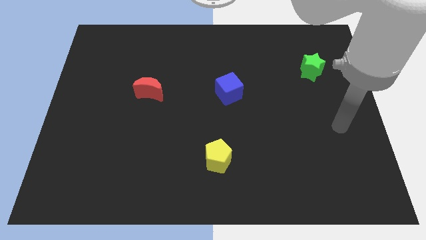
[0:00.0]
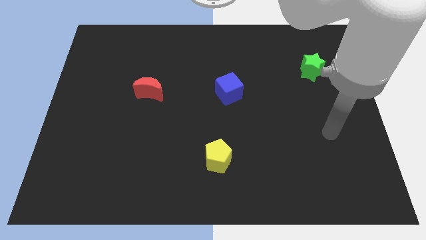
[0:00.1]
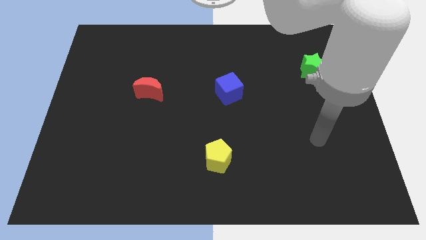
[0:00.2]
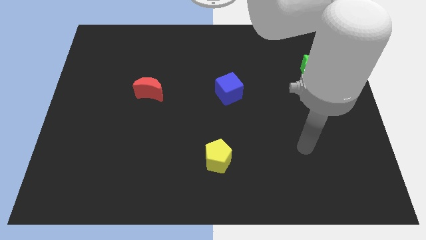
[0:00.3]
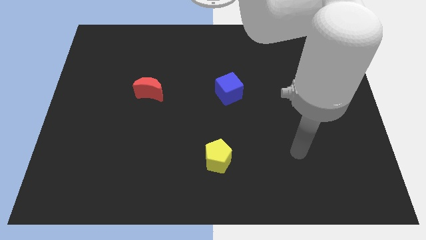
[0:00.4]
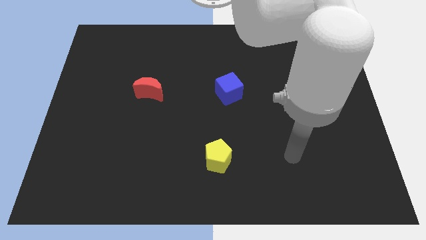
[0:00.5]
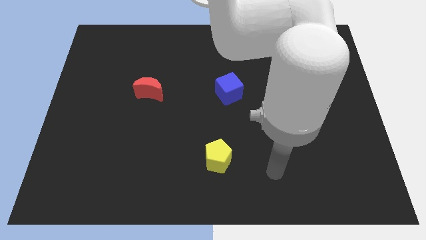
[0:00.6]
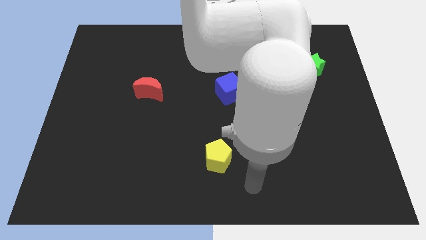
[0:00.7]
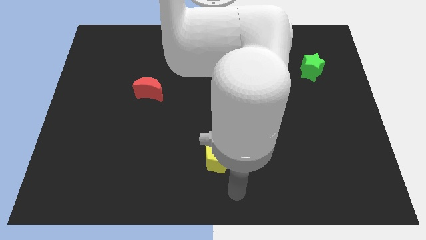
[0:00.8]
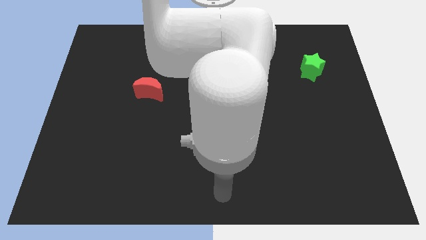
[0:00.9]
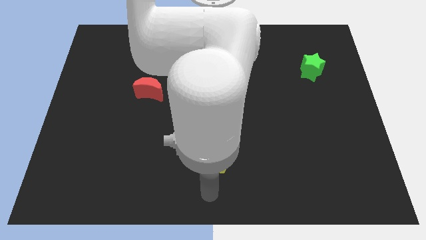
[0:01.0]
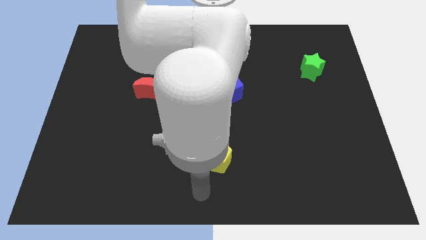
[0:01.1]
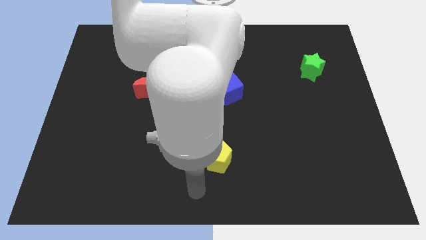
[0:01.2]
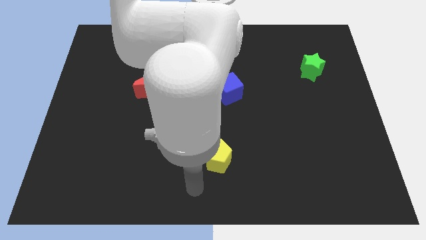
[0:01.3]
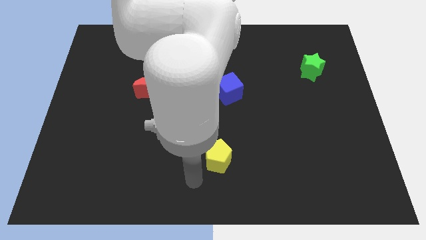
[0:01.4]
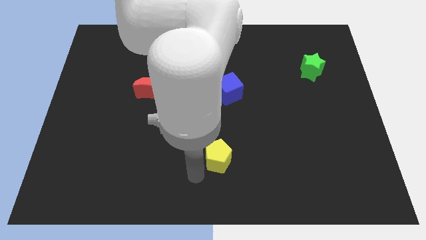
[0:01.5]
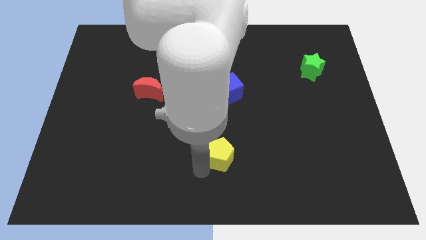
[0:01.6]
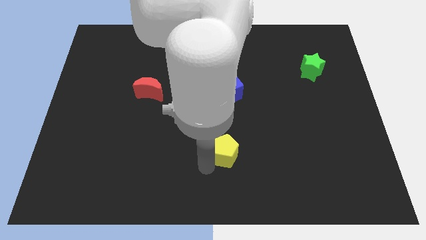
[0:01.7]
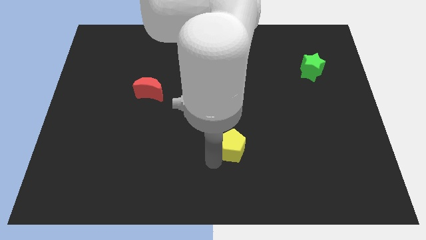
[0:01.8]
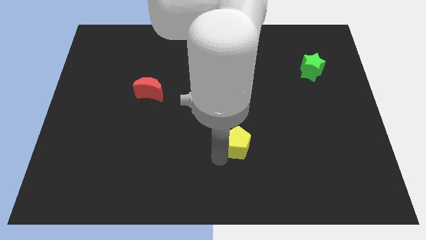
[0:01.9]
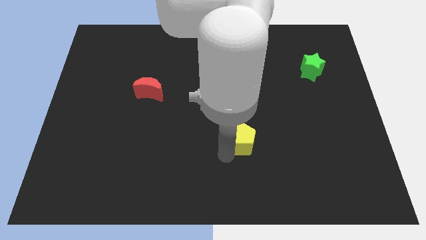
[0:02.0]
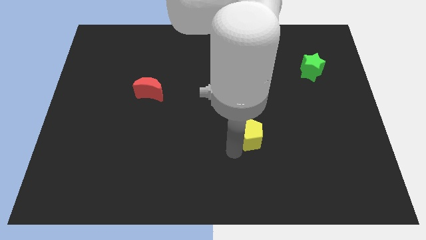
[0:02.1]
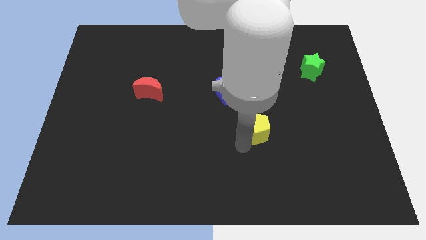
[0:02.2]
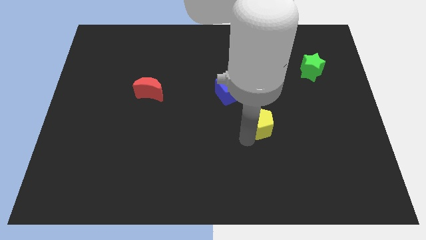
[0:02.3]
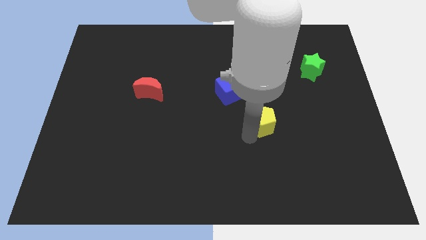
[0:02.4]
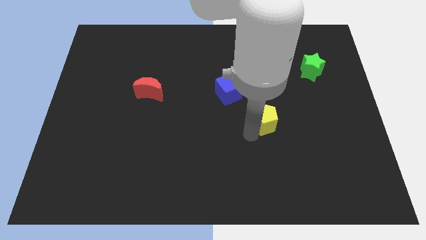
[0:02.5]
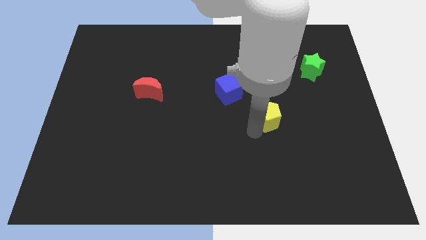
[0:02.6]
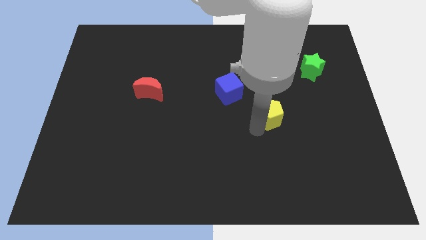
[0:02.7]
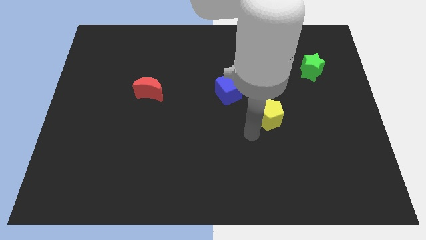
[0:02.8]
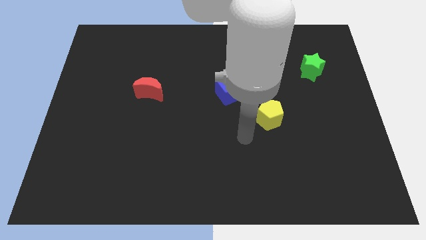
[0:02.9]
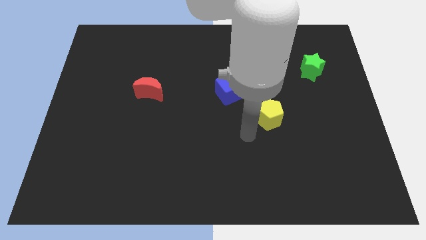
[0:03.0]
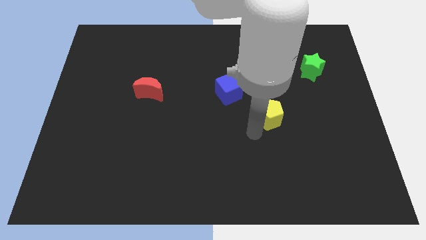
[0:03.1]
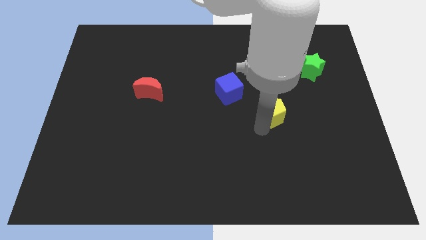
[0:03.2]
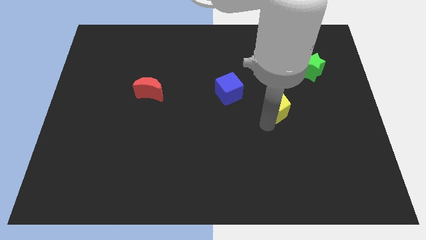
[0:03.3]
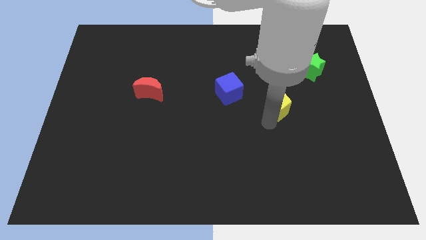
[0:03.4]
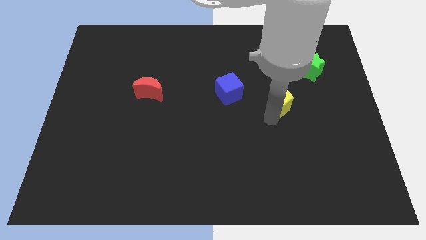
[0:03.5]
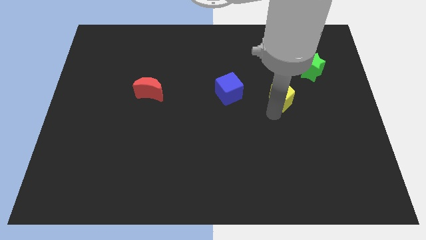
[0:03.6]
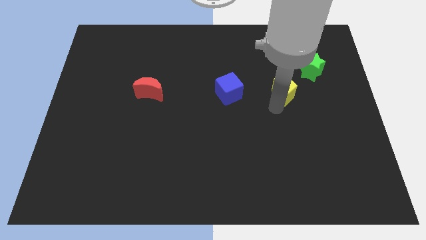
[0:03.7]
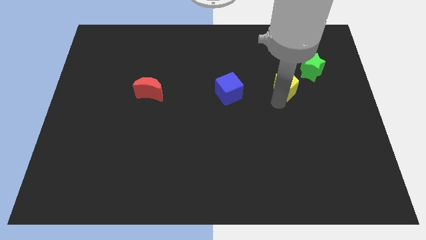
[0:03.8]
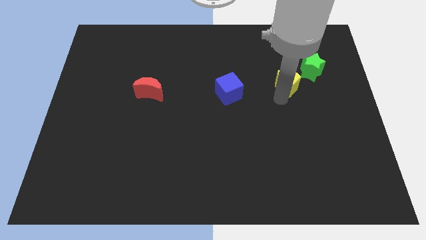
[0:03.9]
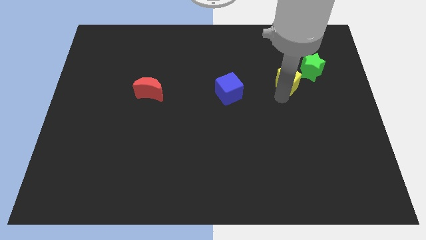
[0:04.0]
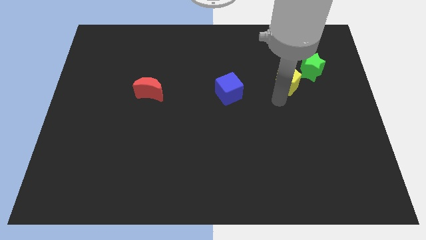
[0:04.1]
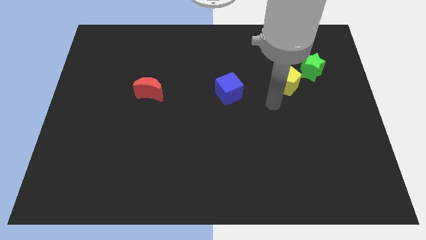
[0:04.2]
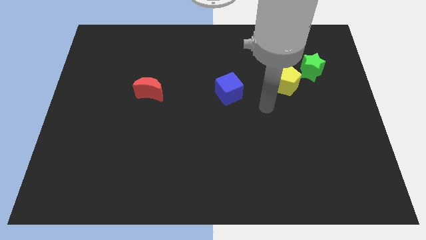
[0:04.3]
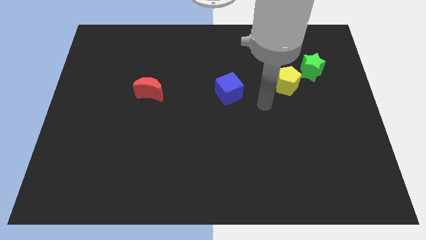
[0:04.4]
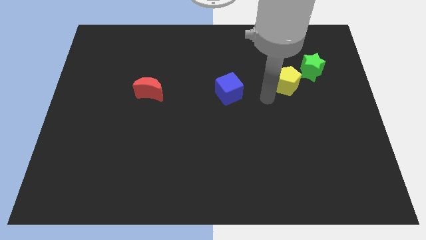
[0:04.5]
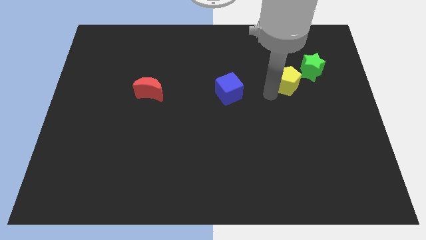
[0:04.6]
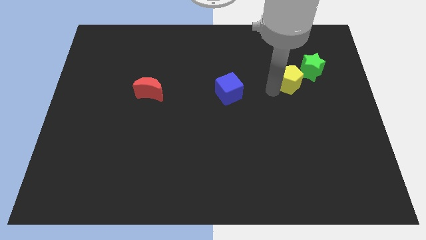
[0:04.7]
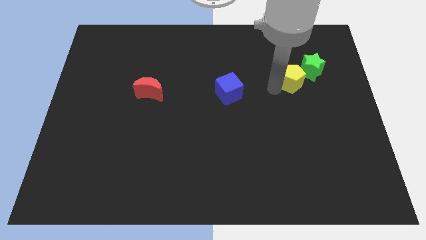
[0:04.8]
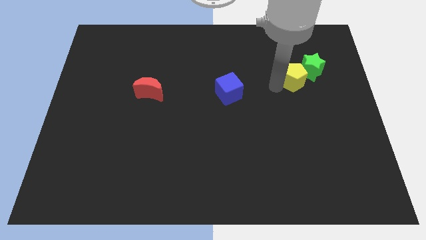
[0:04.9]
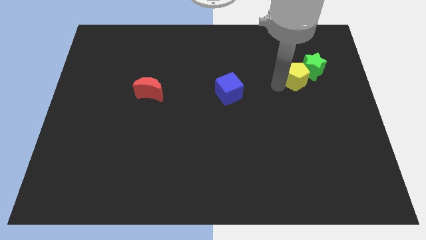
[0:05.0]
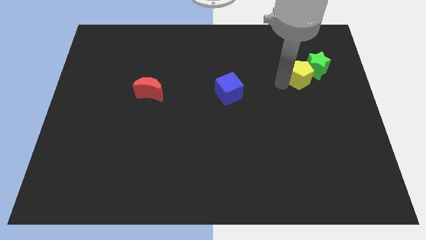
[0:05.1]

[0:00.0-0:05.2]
push the yellow block close to the green star

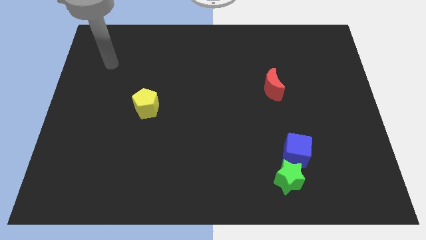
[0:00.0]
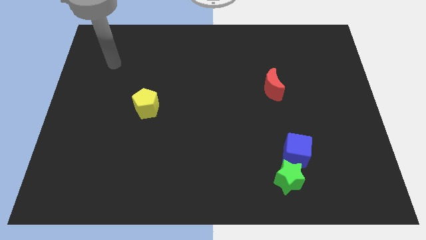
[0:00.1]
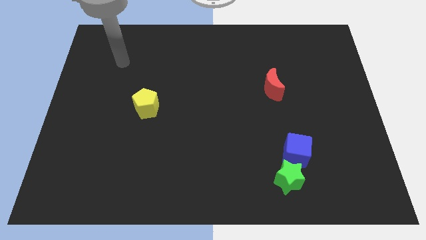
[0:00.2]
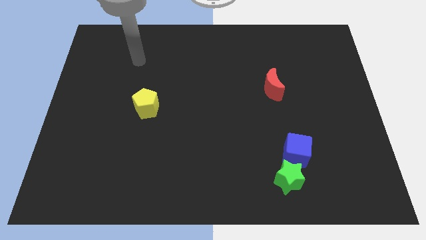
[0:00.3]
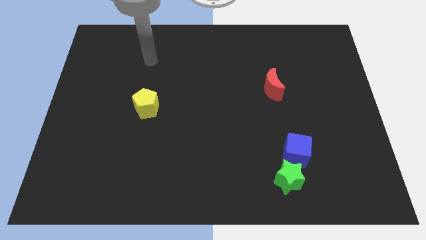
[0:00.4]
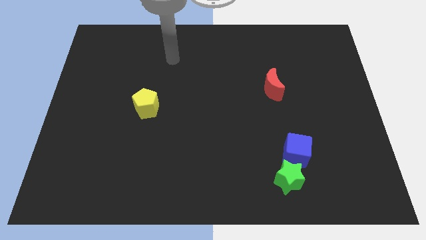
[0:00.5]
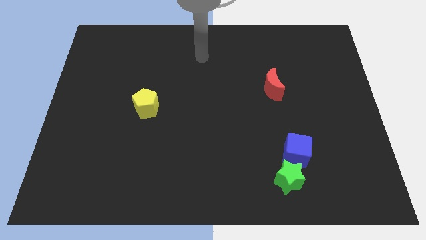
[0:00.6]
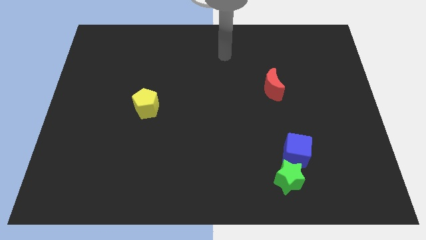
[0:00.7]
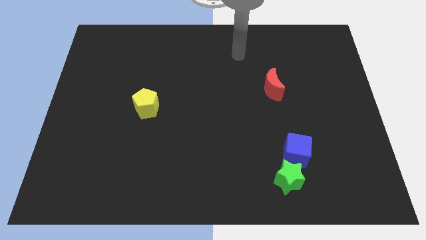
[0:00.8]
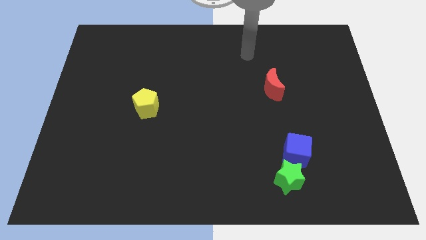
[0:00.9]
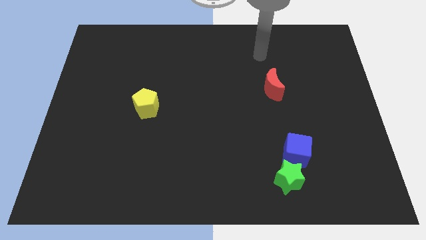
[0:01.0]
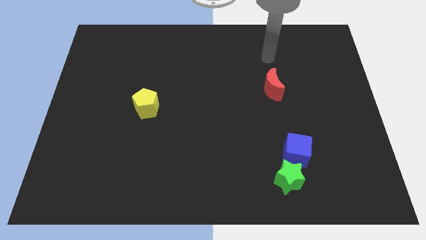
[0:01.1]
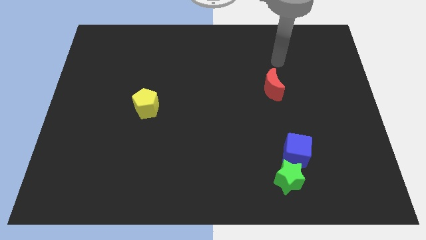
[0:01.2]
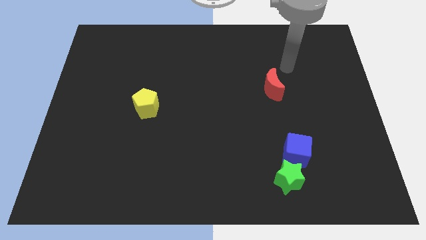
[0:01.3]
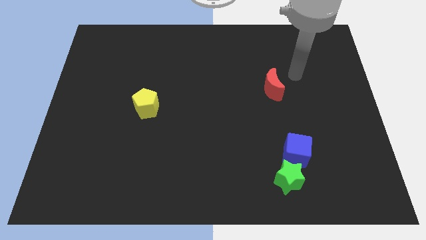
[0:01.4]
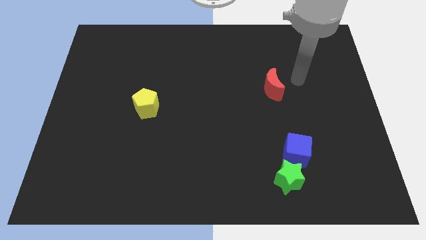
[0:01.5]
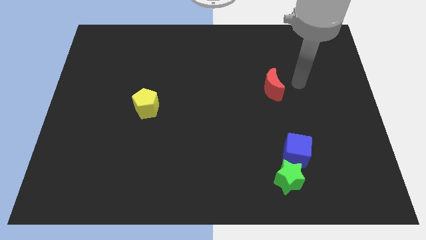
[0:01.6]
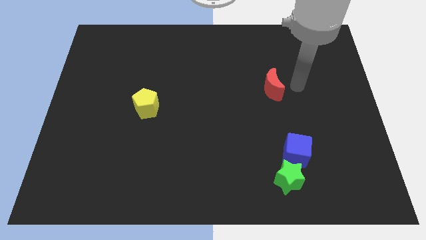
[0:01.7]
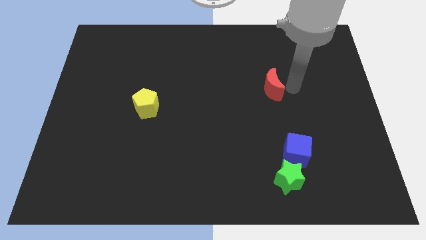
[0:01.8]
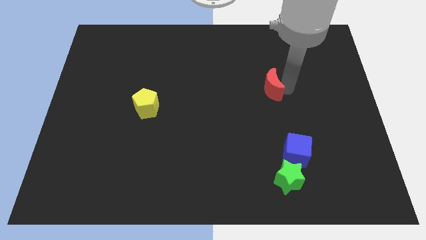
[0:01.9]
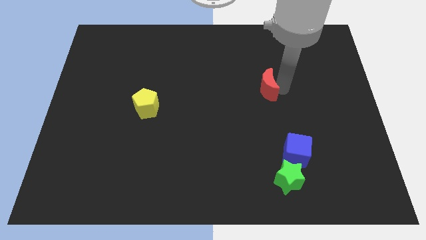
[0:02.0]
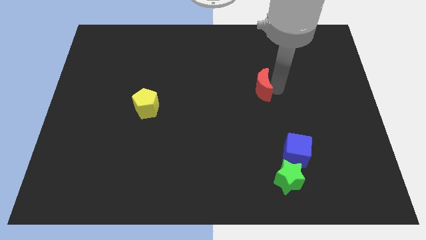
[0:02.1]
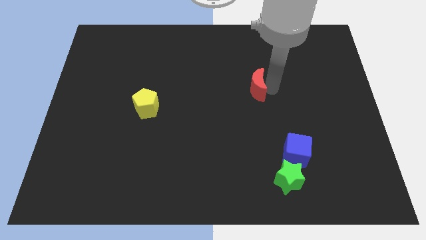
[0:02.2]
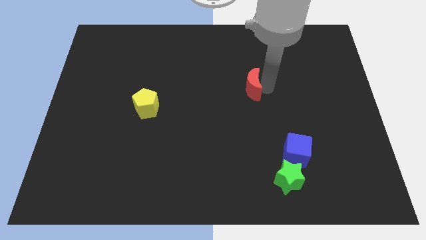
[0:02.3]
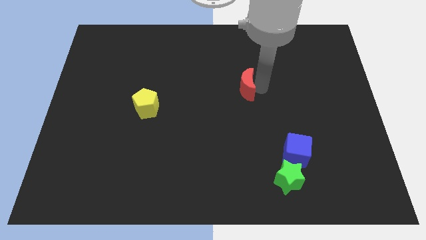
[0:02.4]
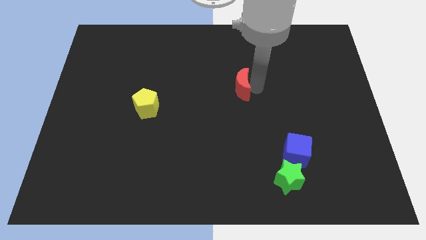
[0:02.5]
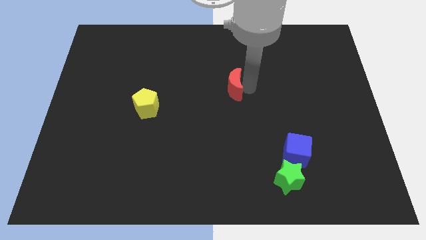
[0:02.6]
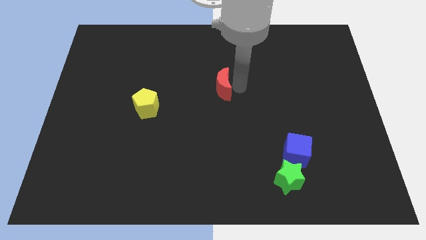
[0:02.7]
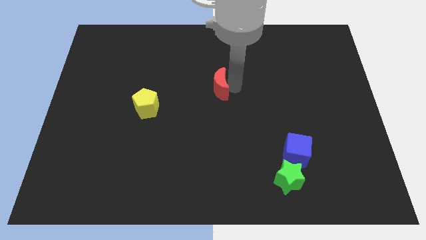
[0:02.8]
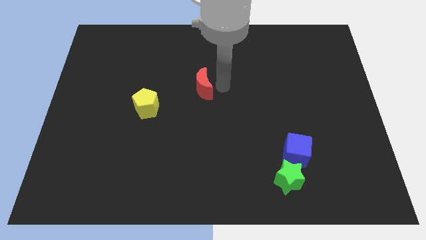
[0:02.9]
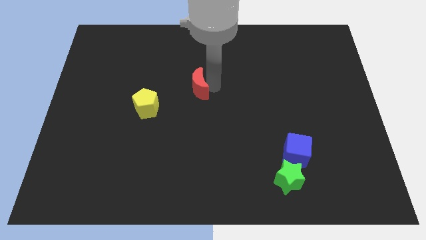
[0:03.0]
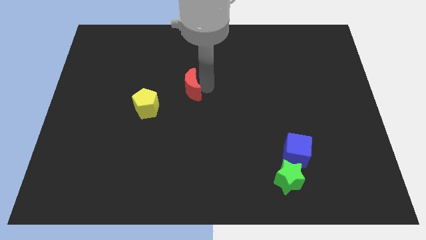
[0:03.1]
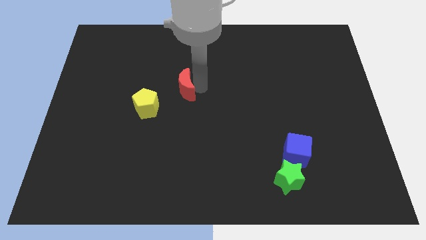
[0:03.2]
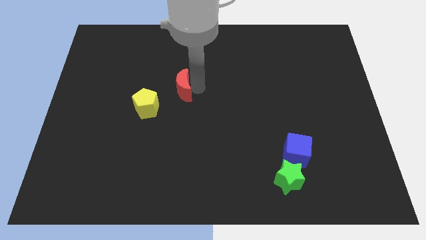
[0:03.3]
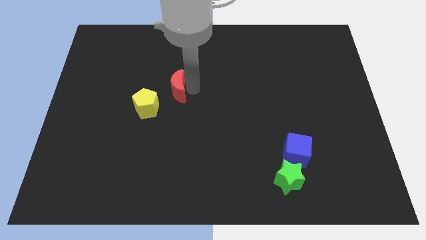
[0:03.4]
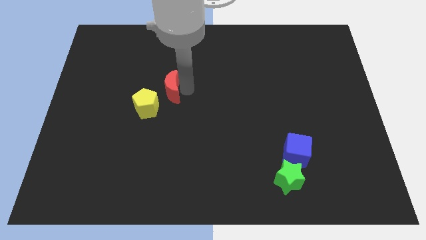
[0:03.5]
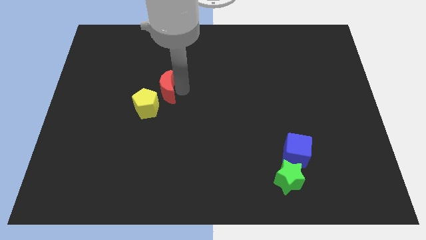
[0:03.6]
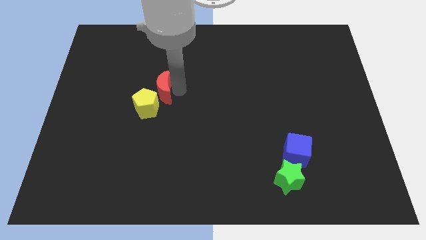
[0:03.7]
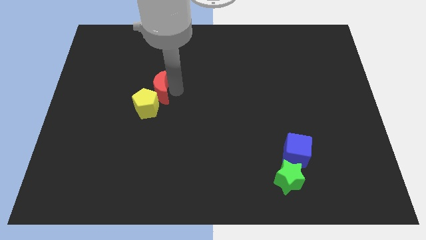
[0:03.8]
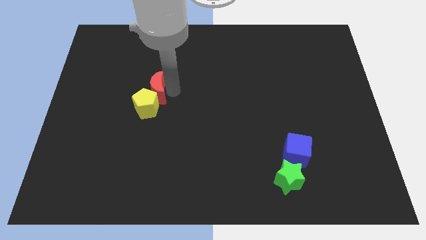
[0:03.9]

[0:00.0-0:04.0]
push the moon next to the yellow pentagon
